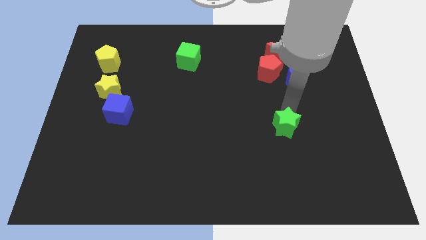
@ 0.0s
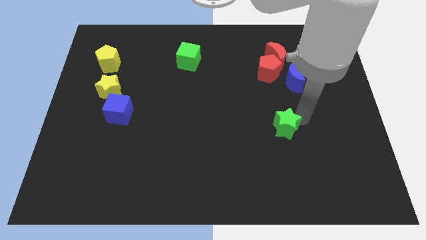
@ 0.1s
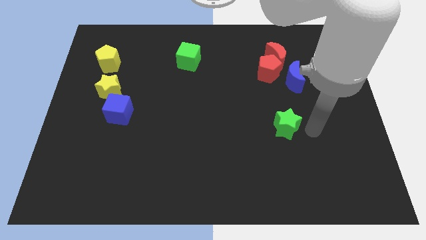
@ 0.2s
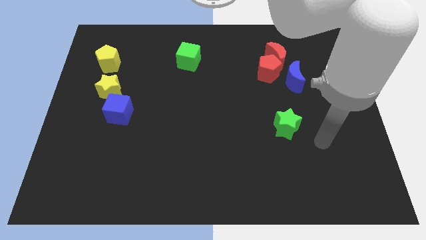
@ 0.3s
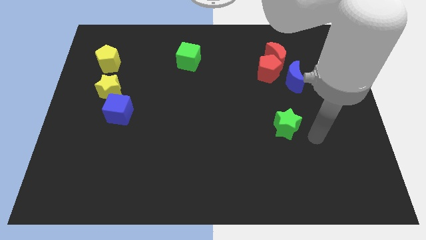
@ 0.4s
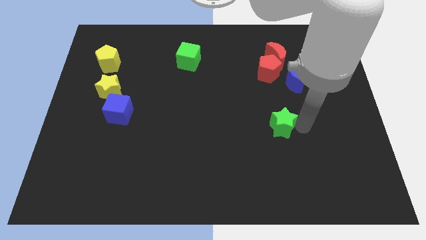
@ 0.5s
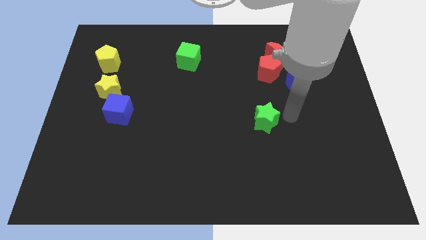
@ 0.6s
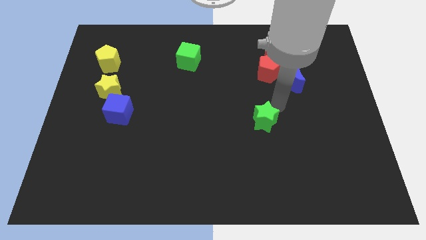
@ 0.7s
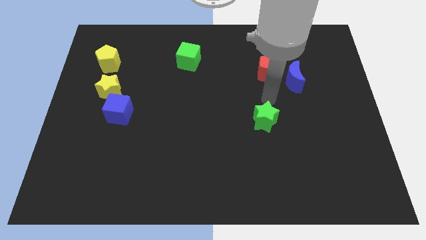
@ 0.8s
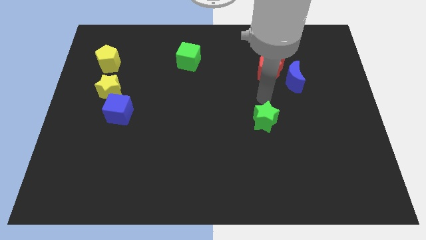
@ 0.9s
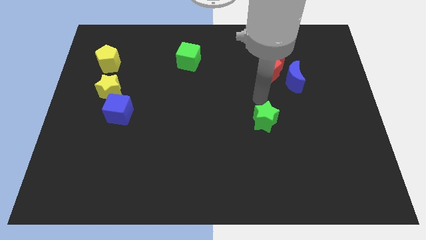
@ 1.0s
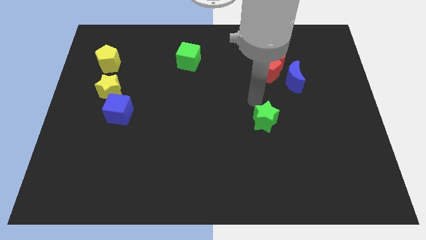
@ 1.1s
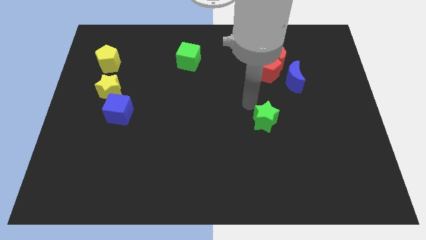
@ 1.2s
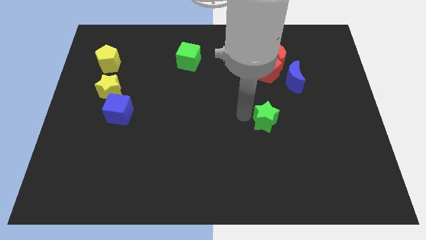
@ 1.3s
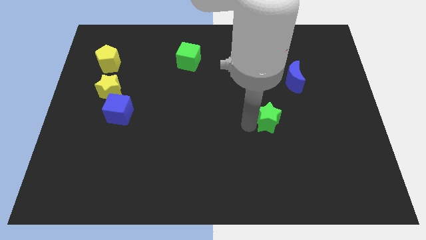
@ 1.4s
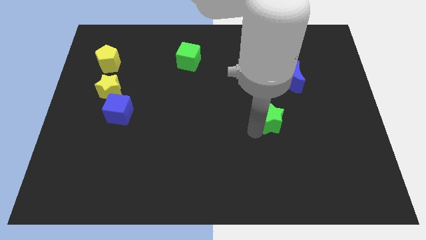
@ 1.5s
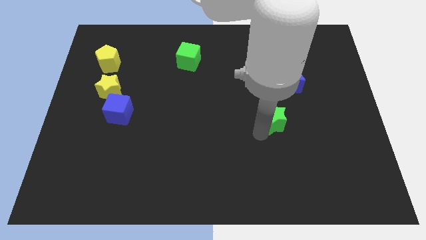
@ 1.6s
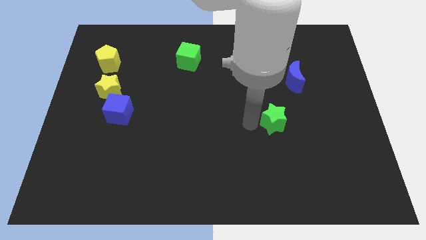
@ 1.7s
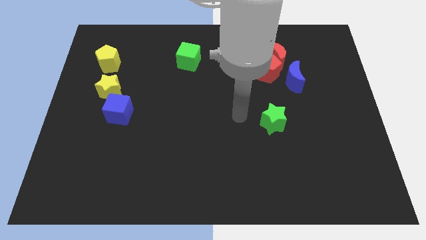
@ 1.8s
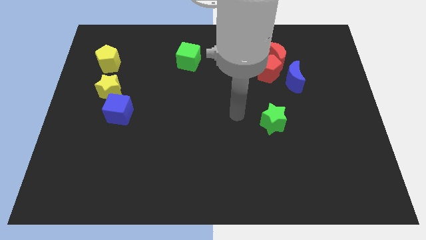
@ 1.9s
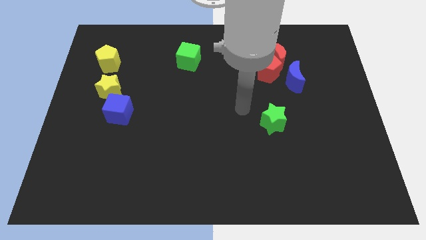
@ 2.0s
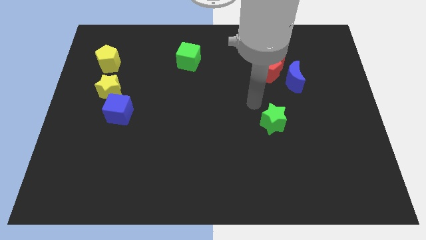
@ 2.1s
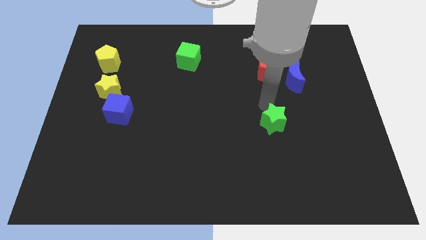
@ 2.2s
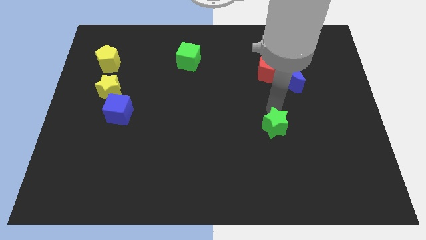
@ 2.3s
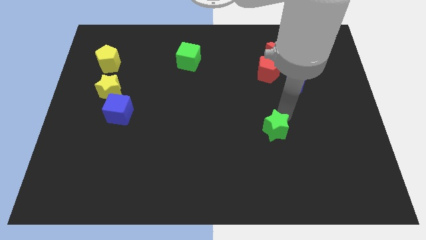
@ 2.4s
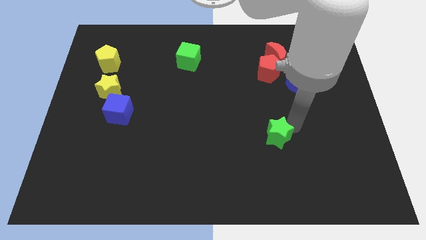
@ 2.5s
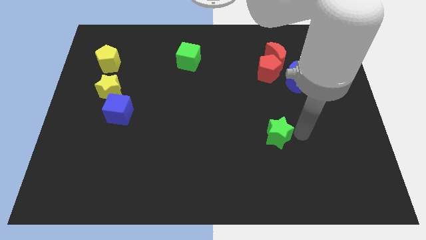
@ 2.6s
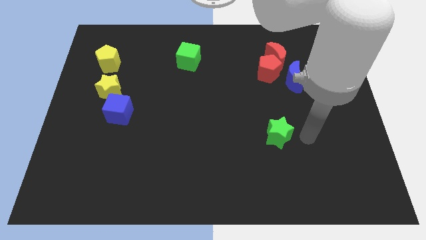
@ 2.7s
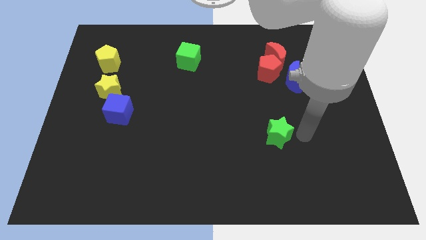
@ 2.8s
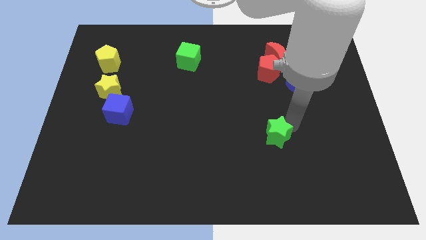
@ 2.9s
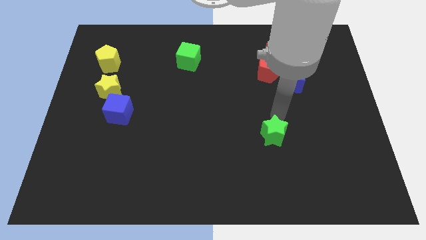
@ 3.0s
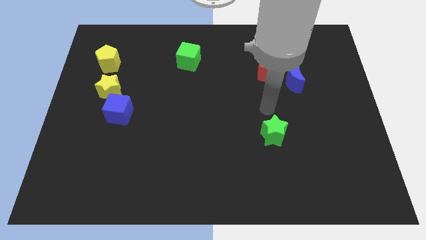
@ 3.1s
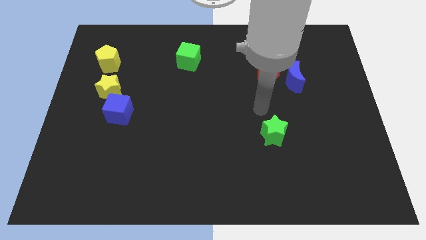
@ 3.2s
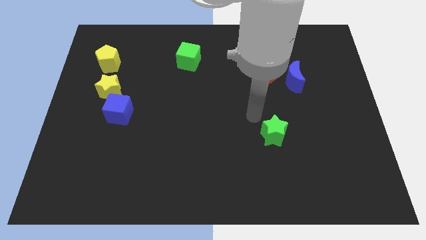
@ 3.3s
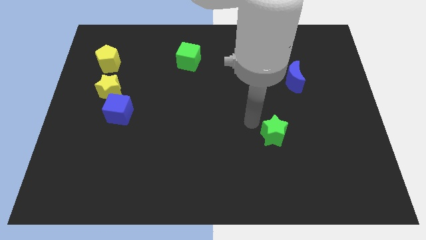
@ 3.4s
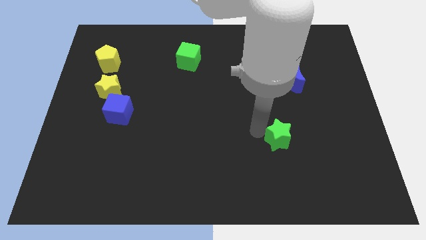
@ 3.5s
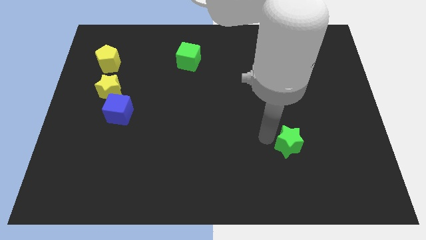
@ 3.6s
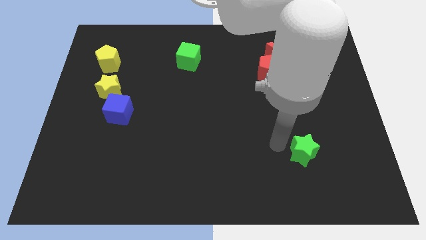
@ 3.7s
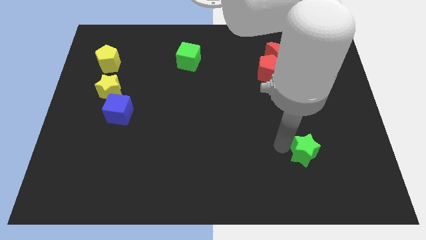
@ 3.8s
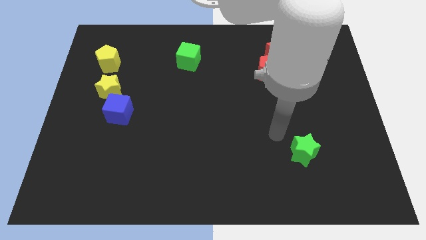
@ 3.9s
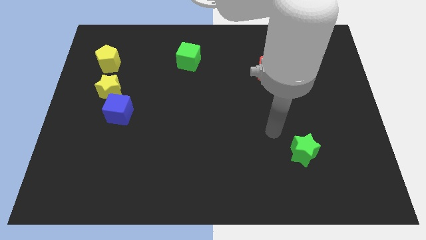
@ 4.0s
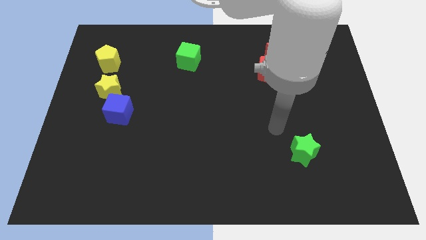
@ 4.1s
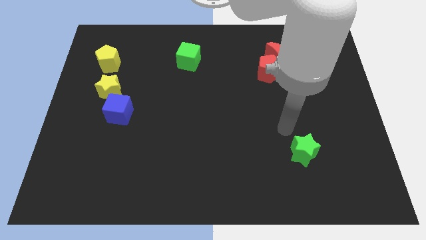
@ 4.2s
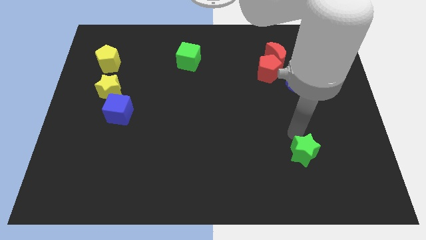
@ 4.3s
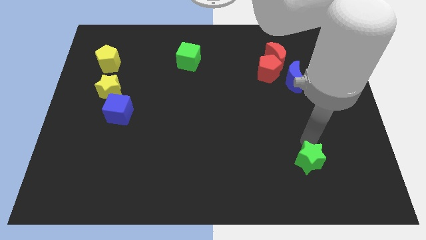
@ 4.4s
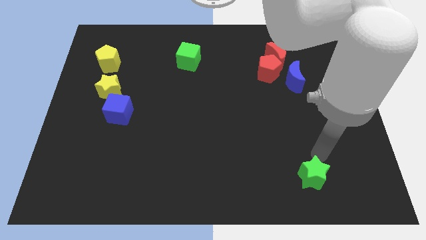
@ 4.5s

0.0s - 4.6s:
move the green star to the bottom of blue crescent

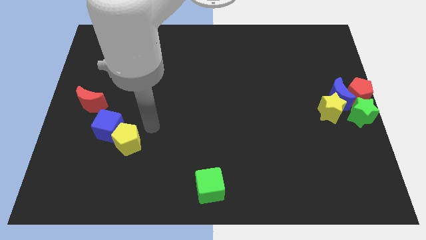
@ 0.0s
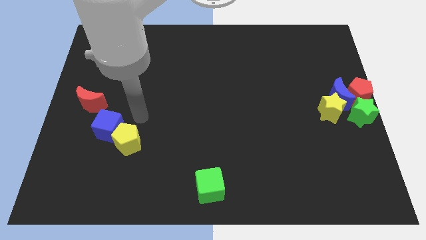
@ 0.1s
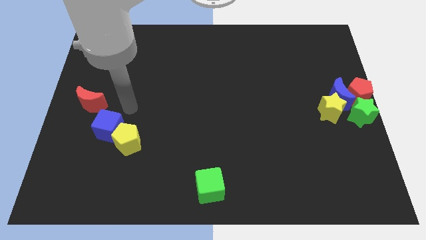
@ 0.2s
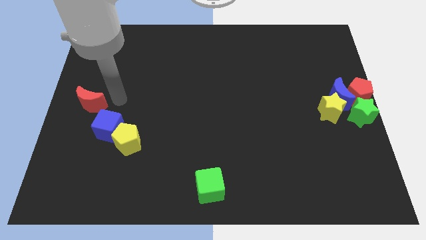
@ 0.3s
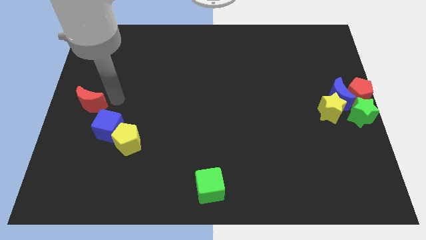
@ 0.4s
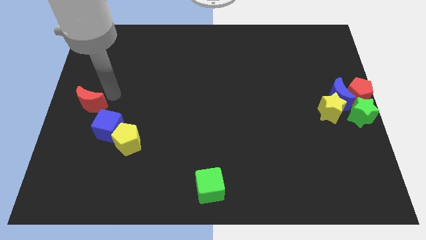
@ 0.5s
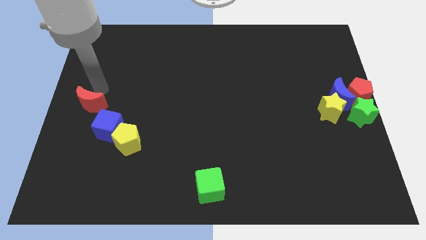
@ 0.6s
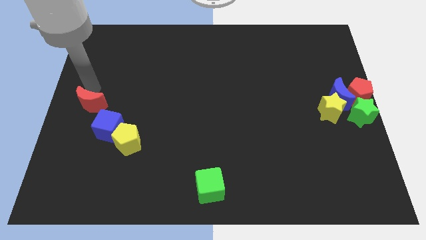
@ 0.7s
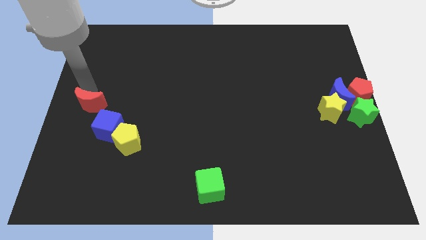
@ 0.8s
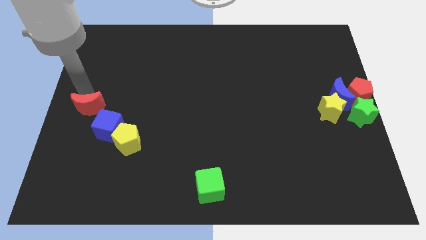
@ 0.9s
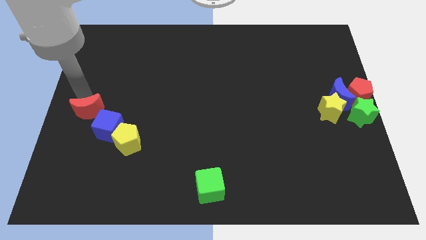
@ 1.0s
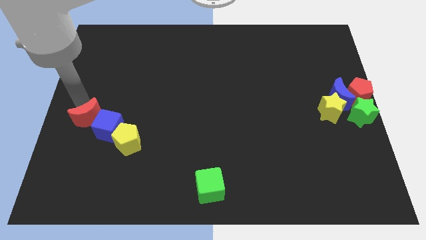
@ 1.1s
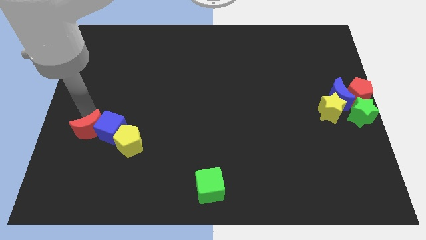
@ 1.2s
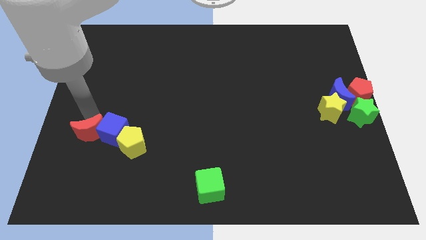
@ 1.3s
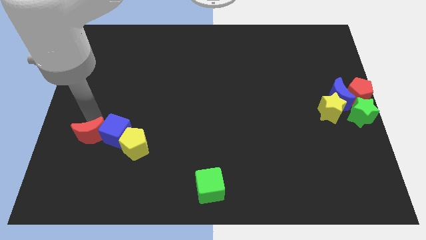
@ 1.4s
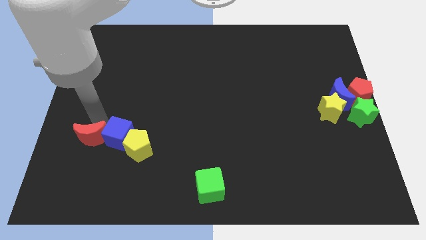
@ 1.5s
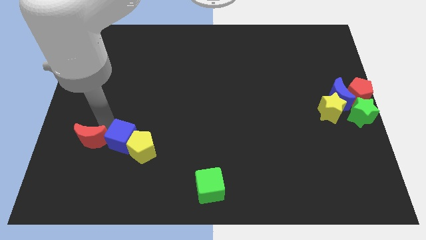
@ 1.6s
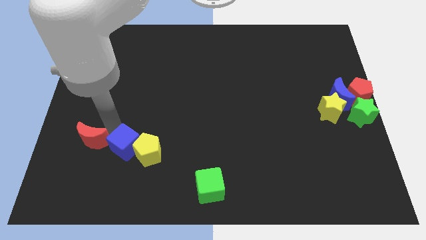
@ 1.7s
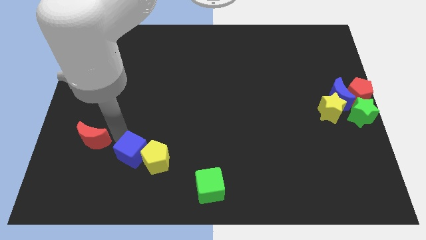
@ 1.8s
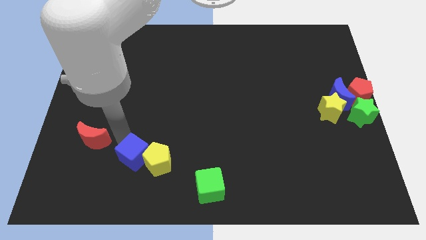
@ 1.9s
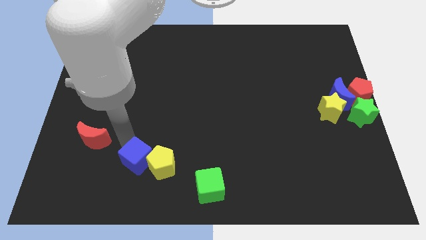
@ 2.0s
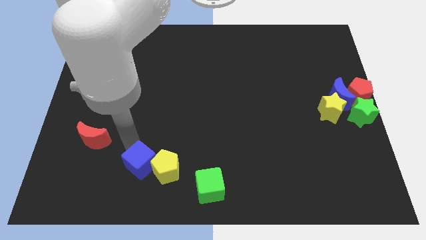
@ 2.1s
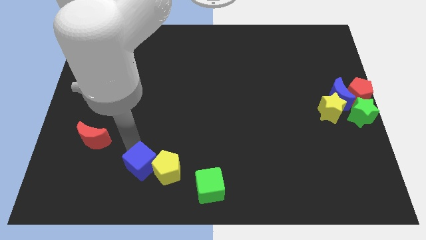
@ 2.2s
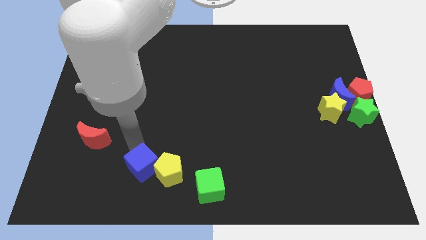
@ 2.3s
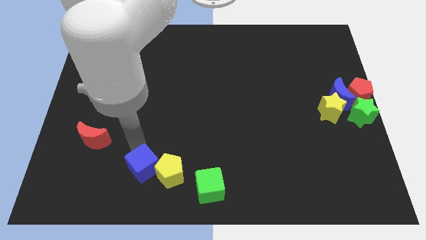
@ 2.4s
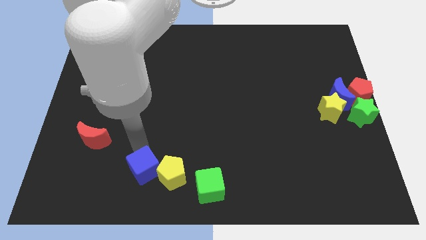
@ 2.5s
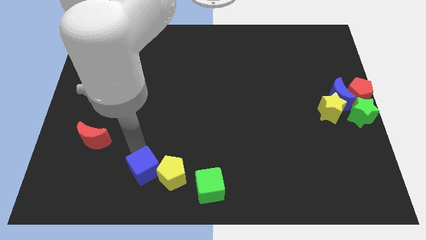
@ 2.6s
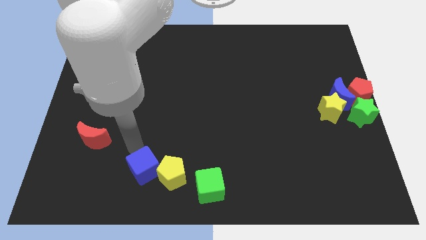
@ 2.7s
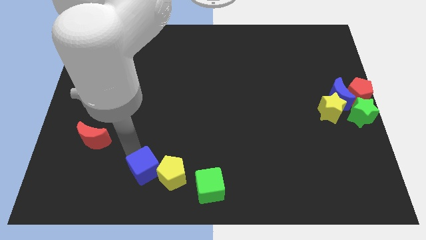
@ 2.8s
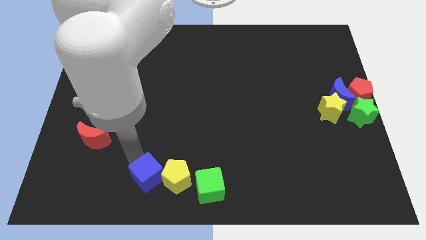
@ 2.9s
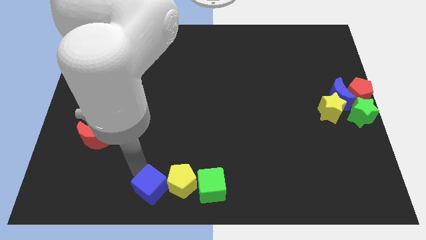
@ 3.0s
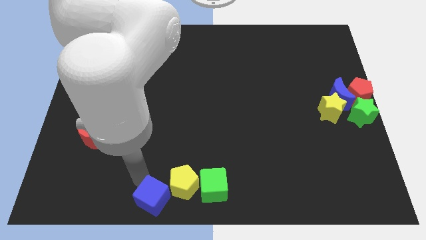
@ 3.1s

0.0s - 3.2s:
move blue cube towards the bottom side of the board

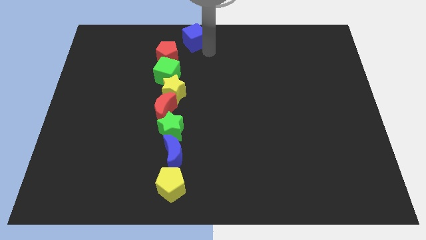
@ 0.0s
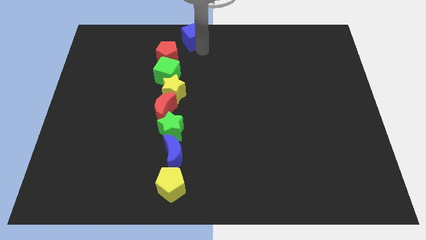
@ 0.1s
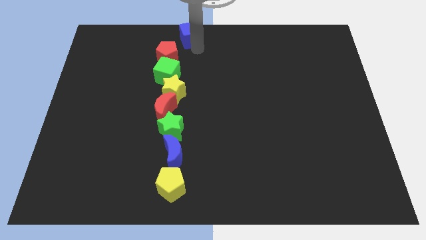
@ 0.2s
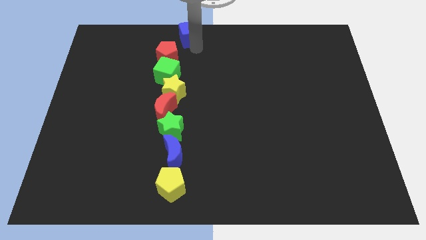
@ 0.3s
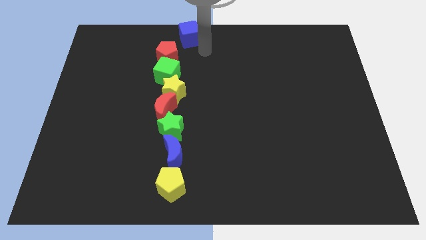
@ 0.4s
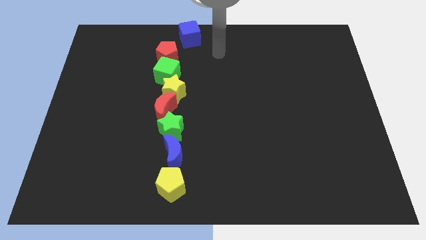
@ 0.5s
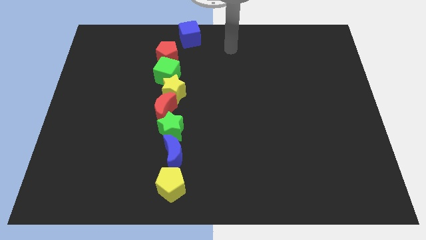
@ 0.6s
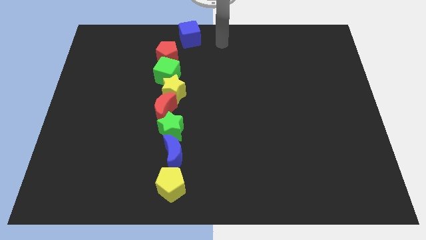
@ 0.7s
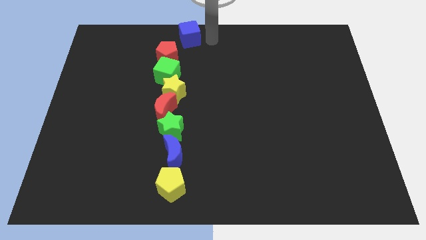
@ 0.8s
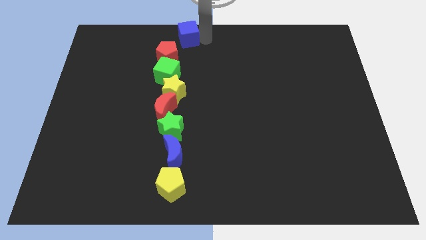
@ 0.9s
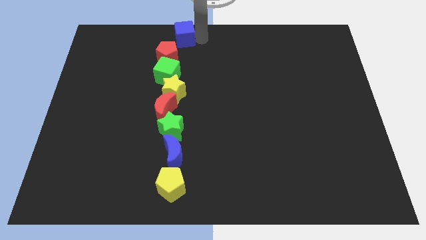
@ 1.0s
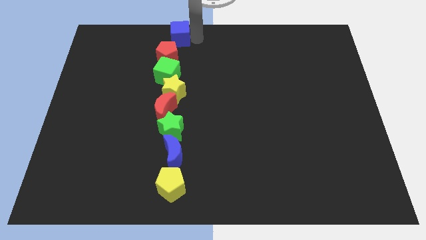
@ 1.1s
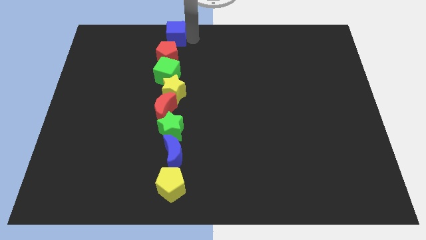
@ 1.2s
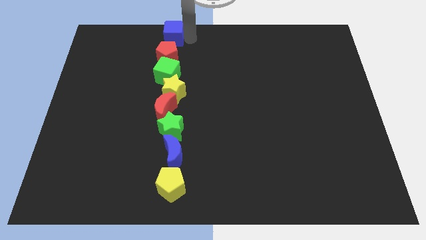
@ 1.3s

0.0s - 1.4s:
push the blue cube to the top of the red pentagon
